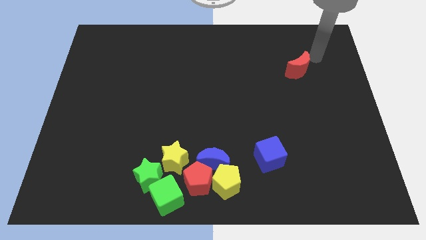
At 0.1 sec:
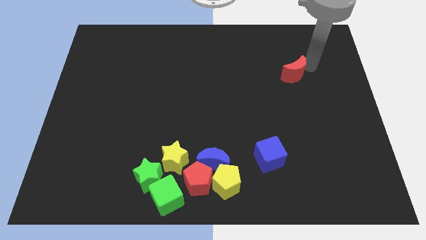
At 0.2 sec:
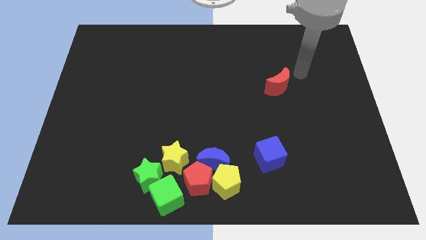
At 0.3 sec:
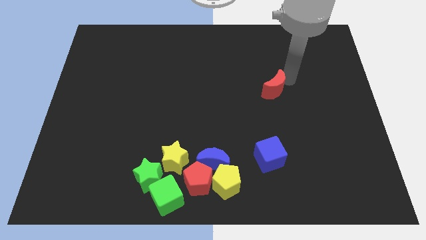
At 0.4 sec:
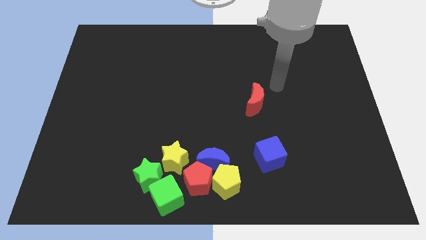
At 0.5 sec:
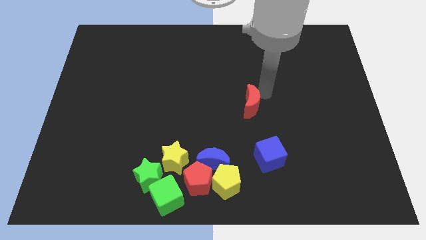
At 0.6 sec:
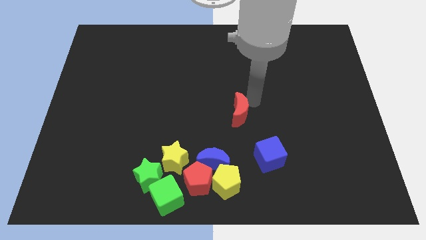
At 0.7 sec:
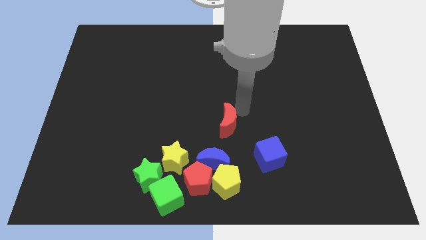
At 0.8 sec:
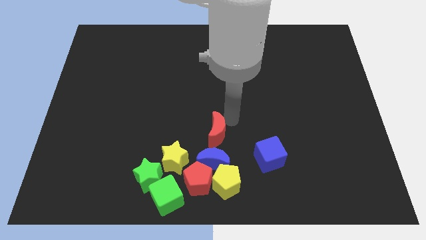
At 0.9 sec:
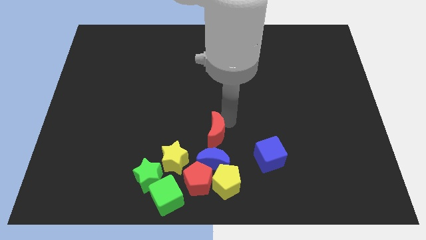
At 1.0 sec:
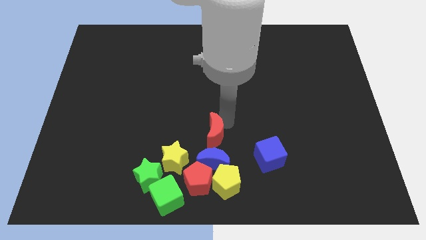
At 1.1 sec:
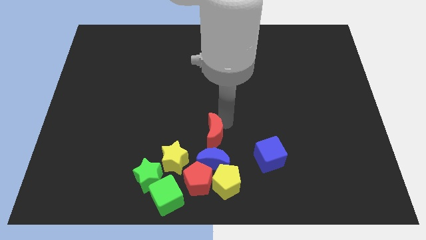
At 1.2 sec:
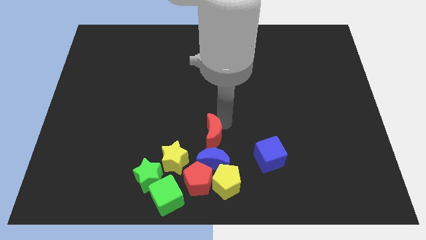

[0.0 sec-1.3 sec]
put the red crescent and blue crescent together

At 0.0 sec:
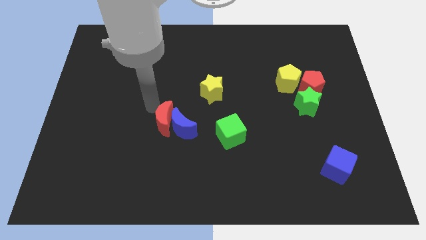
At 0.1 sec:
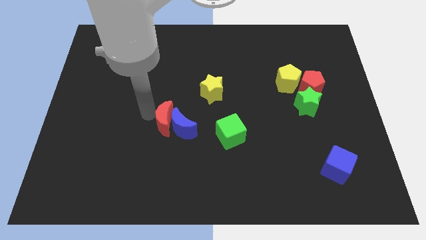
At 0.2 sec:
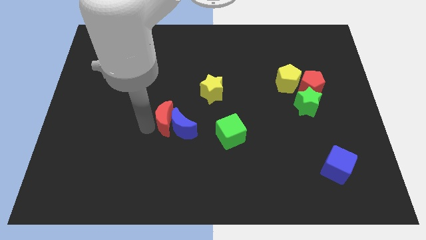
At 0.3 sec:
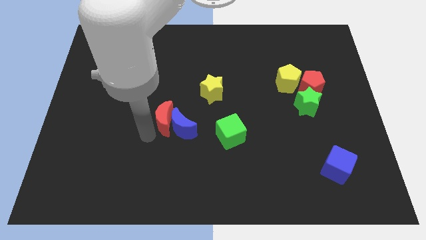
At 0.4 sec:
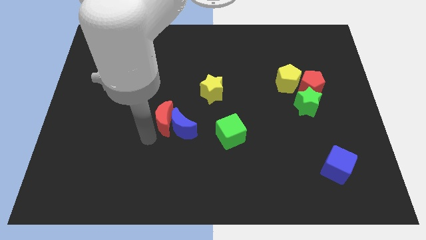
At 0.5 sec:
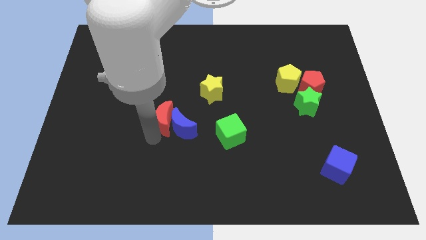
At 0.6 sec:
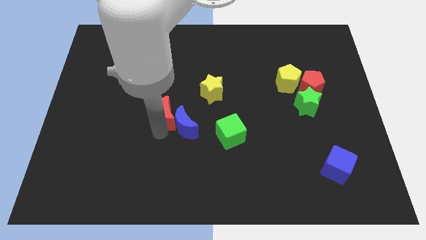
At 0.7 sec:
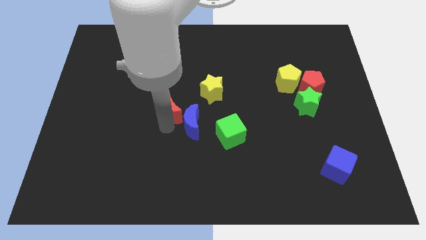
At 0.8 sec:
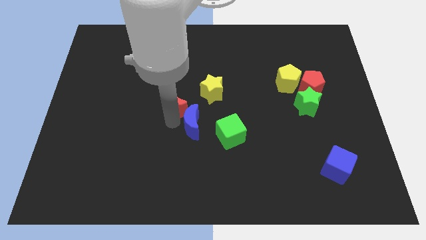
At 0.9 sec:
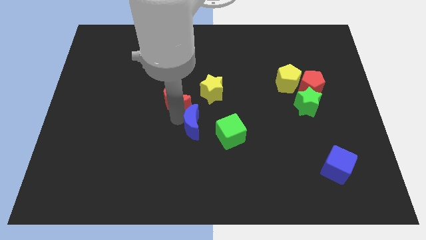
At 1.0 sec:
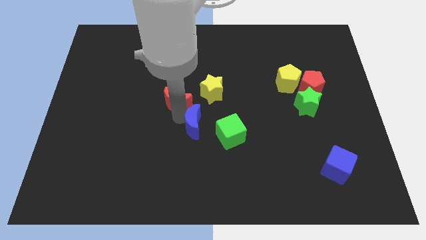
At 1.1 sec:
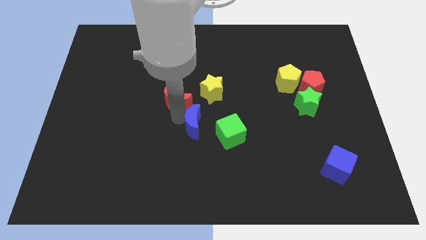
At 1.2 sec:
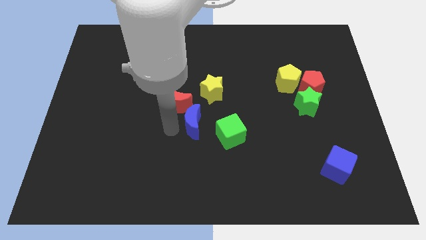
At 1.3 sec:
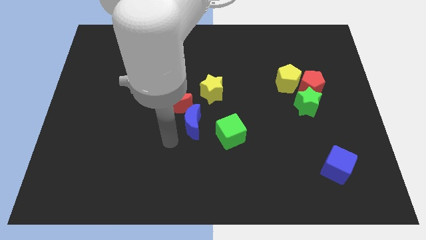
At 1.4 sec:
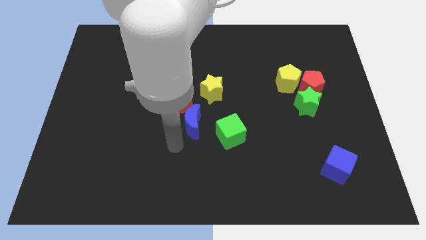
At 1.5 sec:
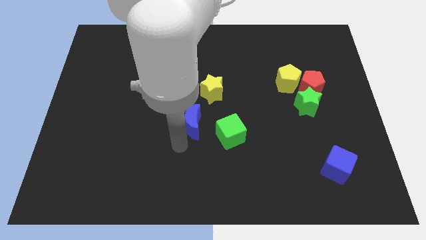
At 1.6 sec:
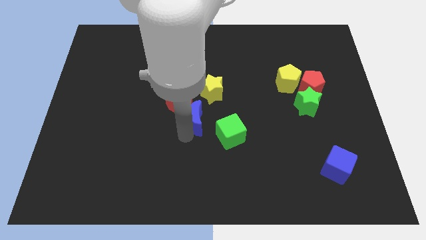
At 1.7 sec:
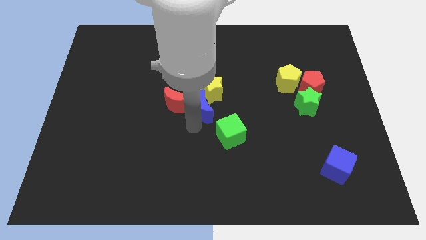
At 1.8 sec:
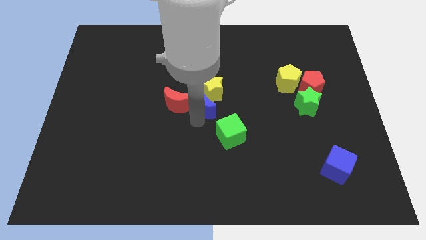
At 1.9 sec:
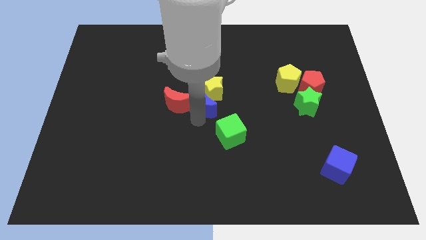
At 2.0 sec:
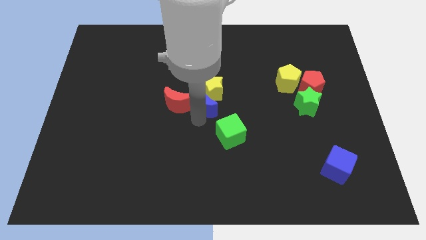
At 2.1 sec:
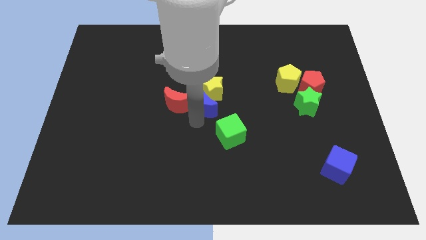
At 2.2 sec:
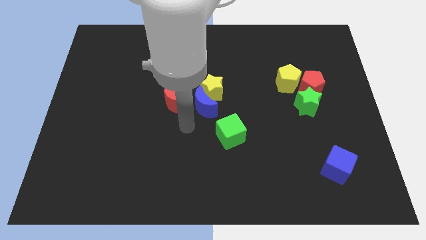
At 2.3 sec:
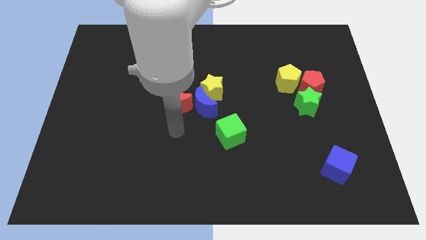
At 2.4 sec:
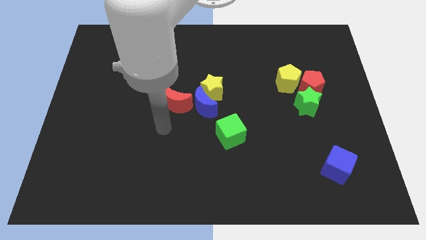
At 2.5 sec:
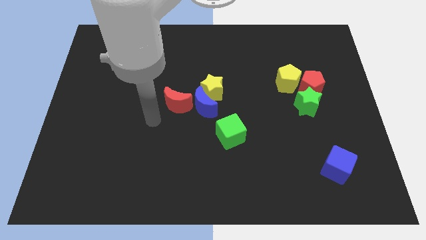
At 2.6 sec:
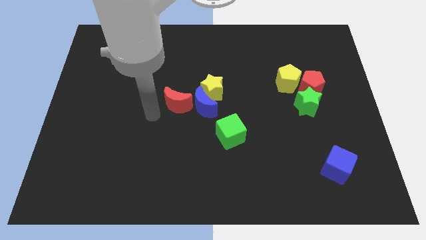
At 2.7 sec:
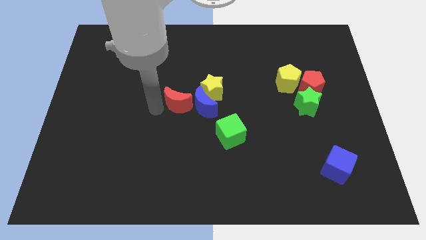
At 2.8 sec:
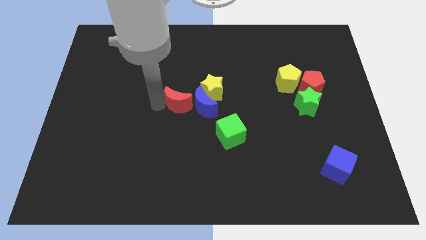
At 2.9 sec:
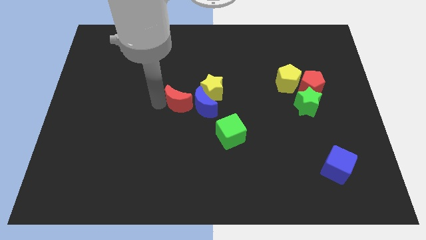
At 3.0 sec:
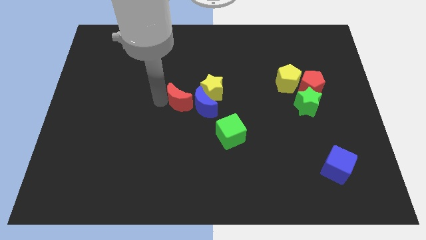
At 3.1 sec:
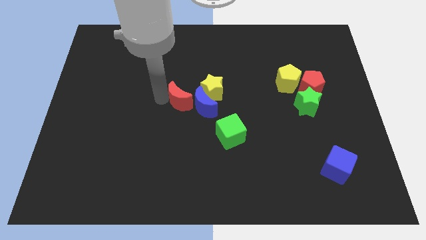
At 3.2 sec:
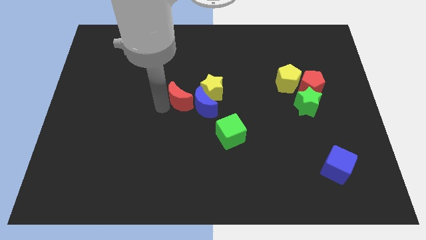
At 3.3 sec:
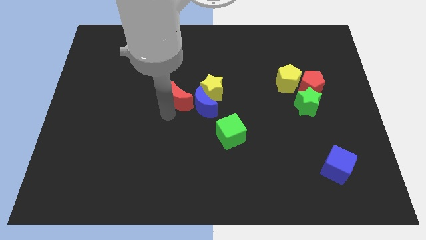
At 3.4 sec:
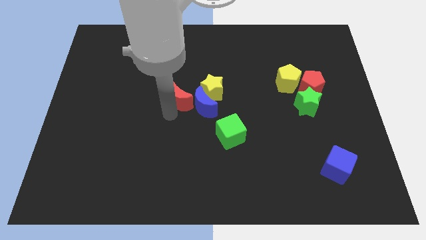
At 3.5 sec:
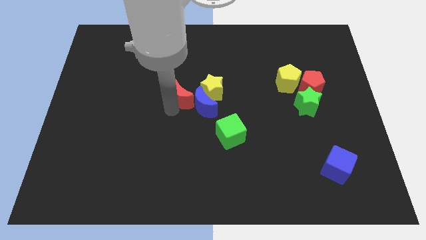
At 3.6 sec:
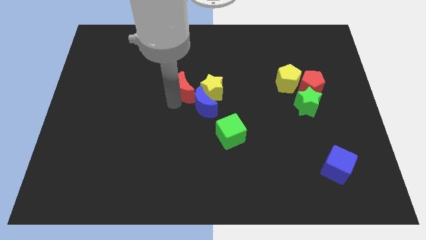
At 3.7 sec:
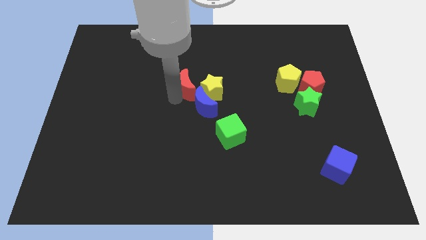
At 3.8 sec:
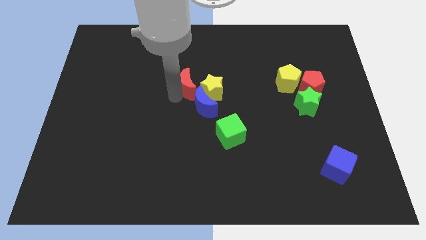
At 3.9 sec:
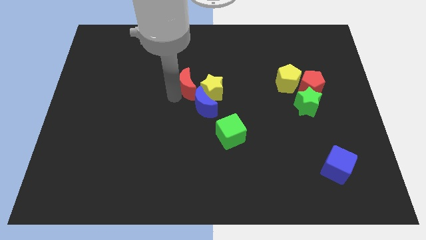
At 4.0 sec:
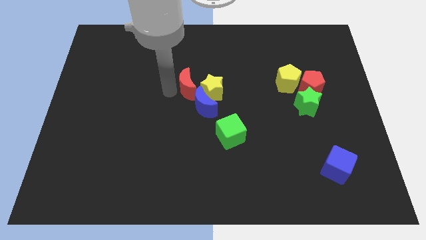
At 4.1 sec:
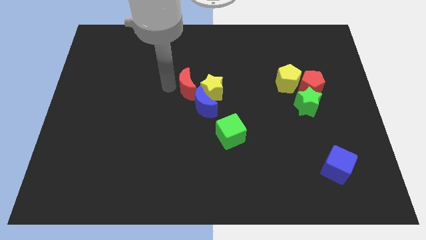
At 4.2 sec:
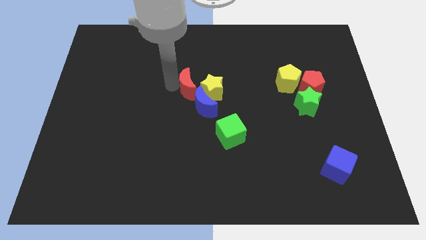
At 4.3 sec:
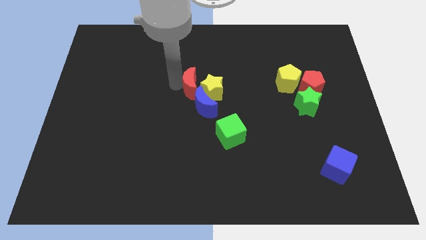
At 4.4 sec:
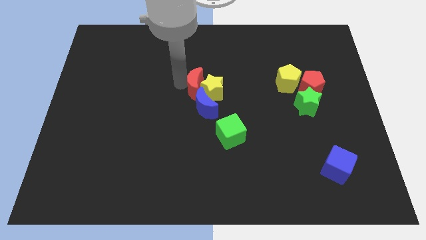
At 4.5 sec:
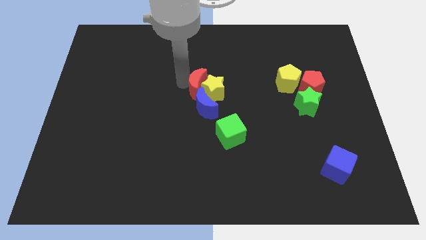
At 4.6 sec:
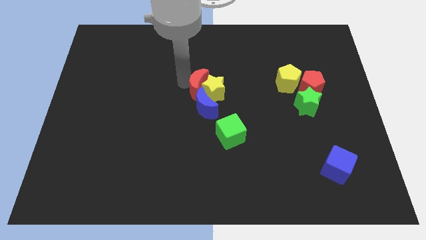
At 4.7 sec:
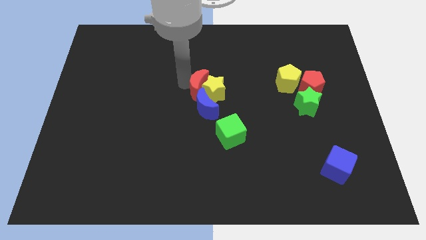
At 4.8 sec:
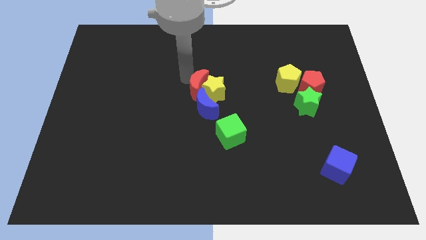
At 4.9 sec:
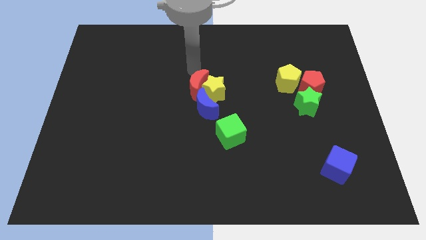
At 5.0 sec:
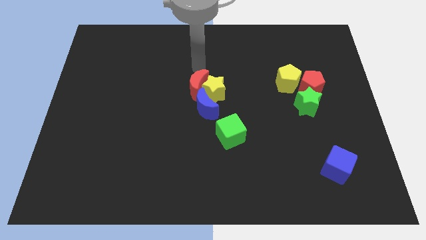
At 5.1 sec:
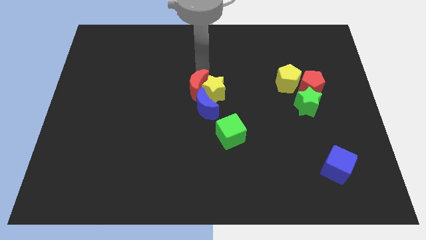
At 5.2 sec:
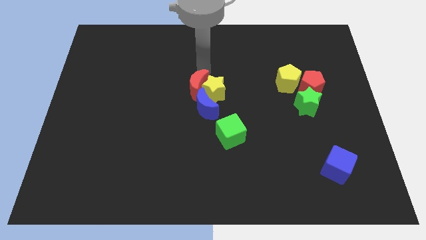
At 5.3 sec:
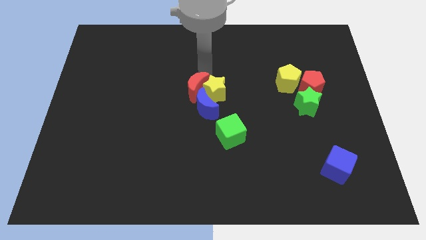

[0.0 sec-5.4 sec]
move the red crescent along with the blue crescent into the yellow star

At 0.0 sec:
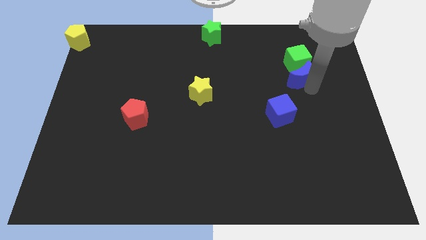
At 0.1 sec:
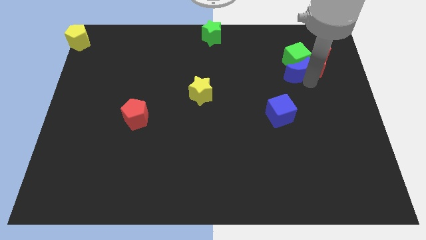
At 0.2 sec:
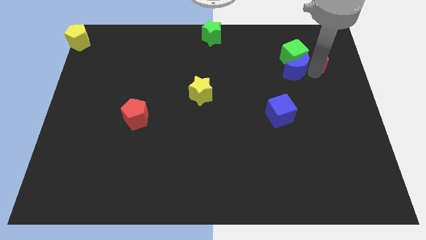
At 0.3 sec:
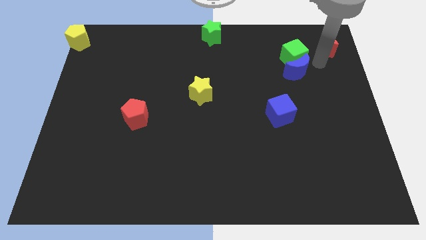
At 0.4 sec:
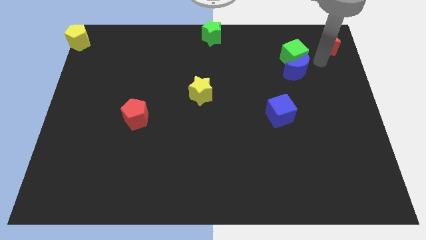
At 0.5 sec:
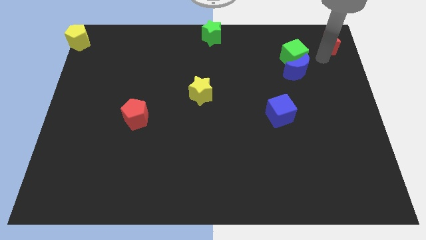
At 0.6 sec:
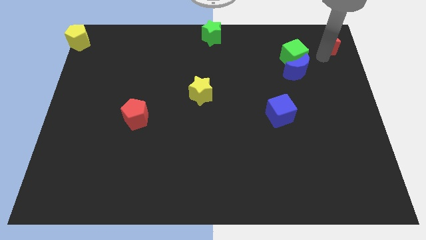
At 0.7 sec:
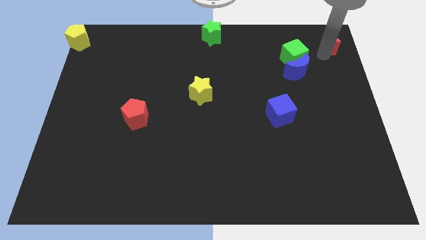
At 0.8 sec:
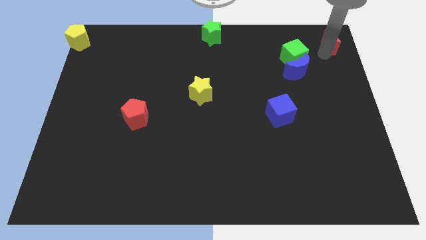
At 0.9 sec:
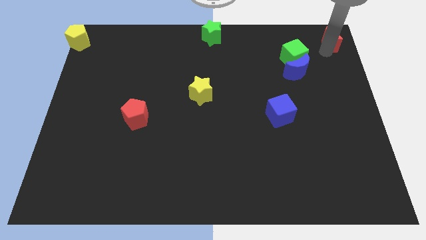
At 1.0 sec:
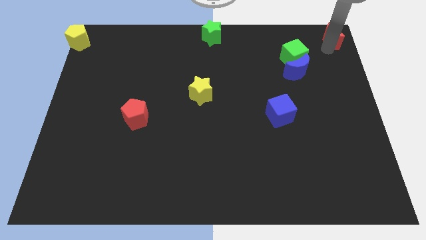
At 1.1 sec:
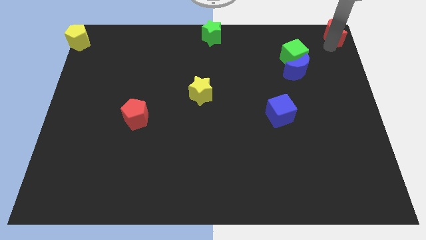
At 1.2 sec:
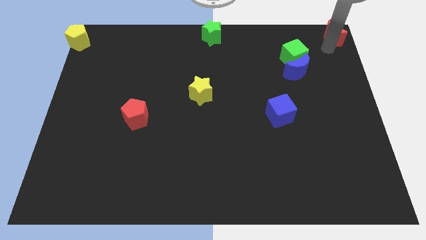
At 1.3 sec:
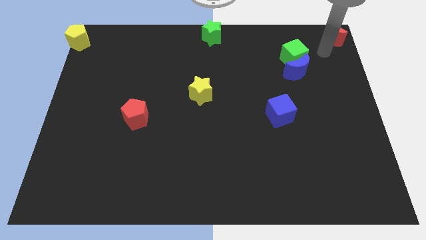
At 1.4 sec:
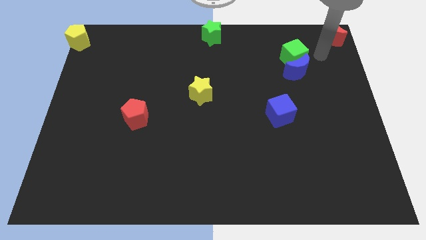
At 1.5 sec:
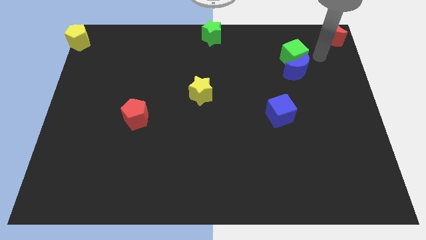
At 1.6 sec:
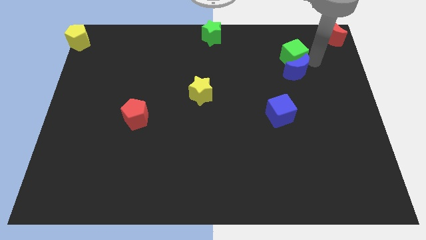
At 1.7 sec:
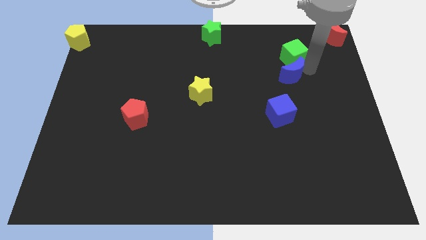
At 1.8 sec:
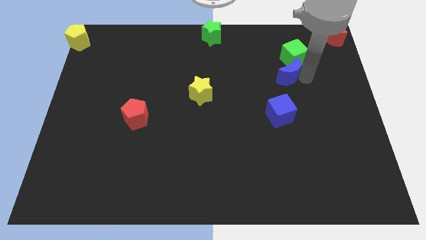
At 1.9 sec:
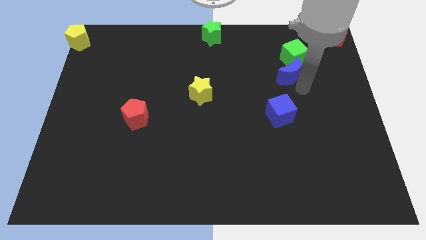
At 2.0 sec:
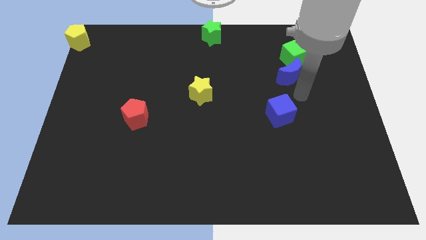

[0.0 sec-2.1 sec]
push red and blue crescents apart
